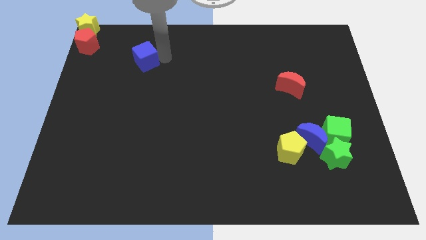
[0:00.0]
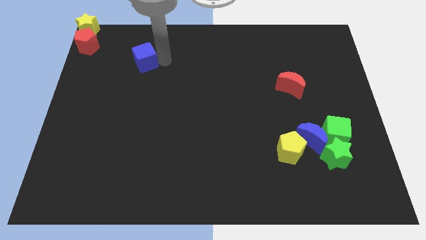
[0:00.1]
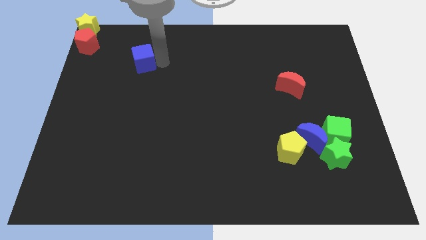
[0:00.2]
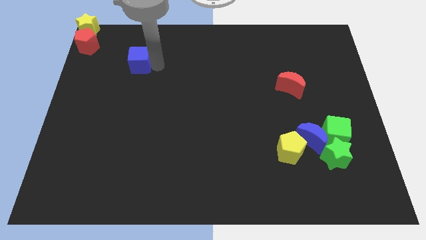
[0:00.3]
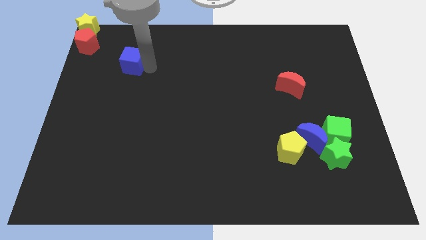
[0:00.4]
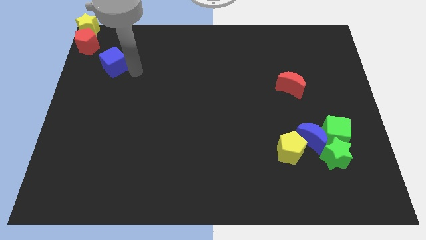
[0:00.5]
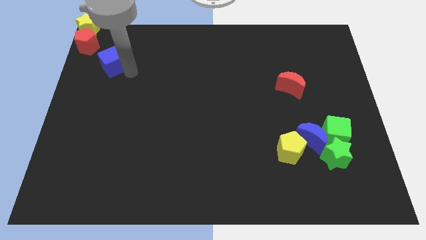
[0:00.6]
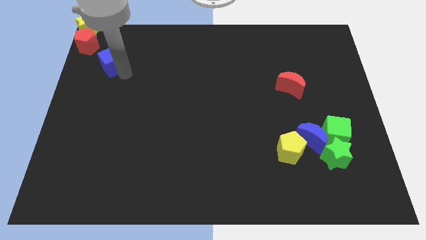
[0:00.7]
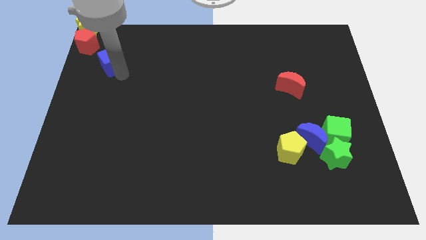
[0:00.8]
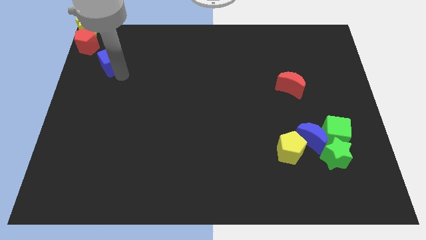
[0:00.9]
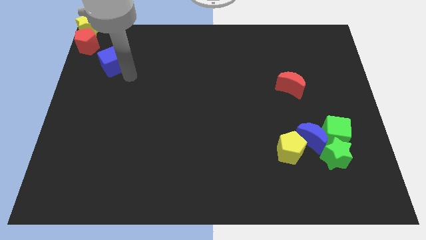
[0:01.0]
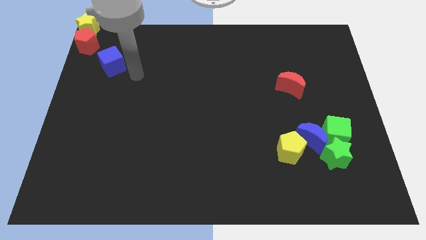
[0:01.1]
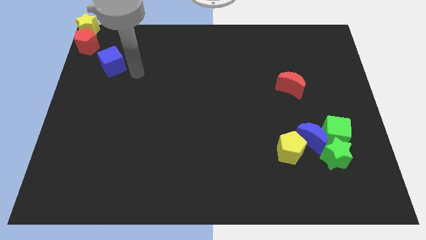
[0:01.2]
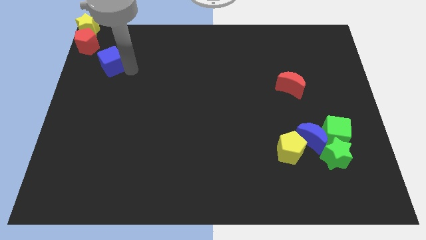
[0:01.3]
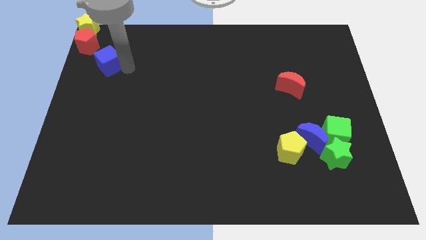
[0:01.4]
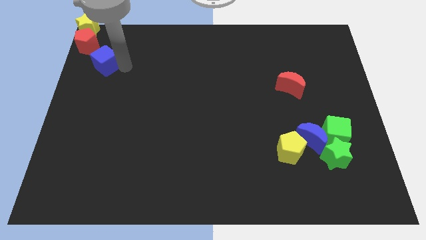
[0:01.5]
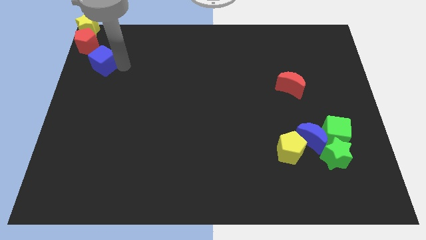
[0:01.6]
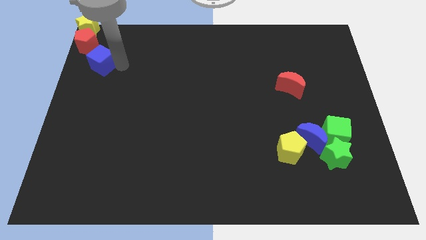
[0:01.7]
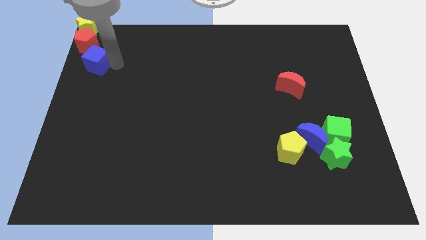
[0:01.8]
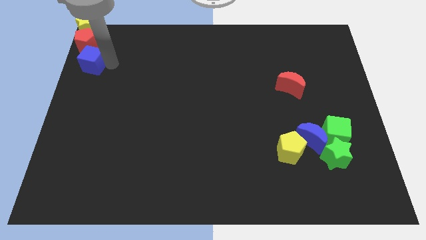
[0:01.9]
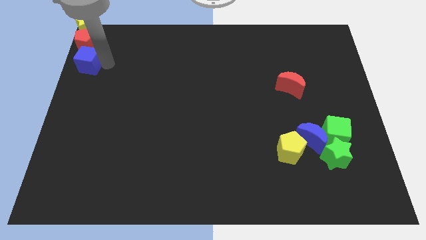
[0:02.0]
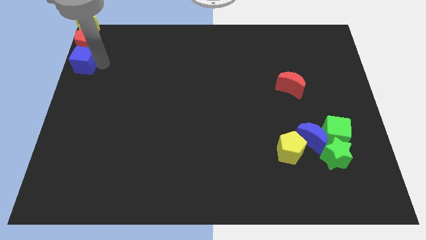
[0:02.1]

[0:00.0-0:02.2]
put the blue cube below the red pentagon

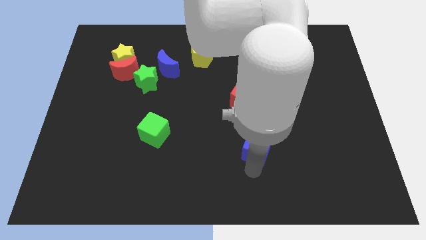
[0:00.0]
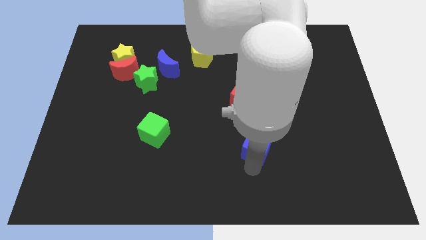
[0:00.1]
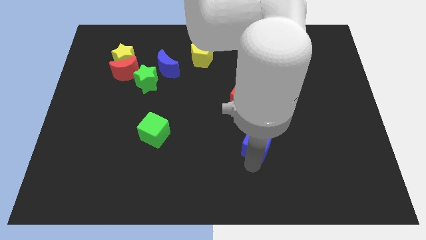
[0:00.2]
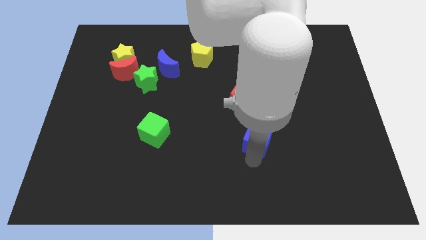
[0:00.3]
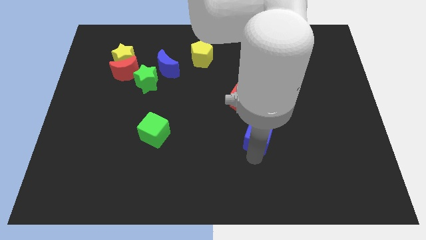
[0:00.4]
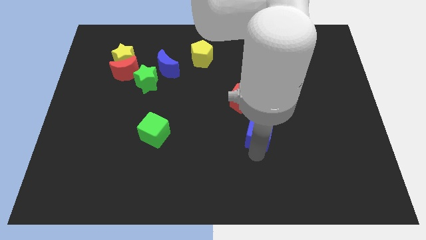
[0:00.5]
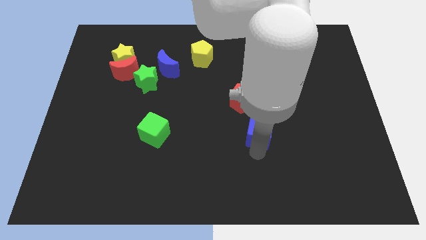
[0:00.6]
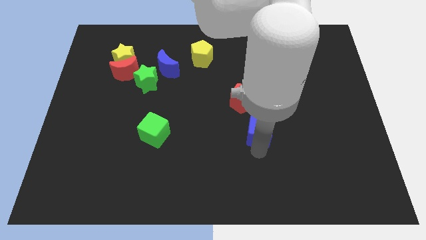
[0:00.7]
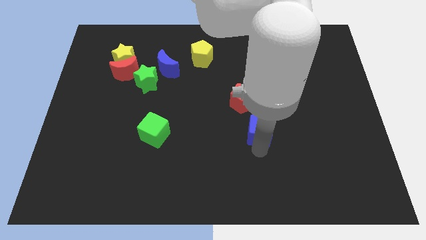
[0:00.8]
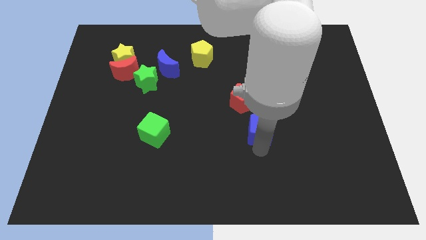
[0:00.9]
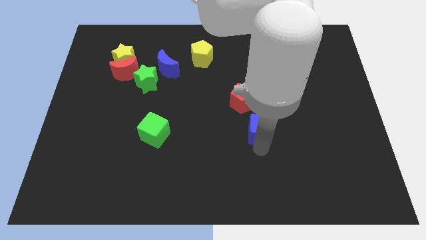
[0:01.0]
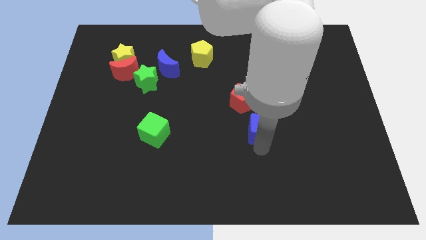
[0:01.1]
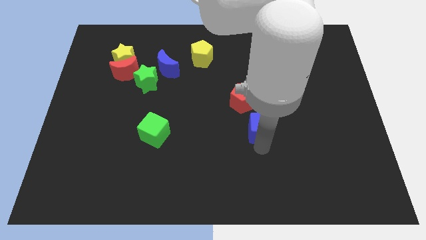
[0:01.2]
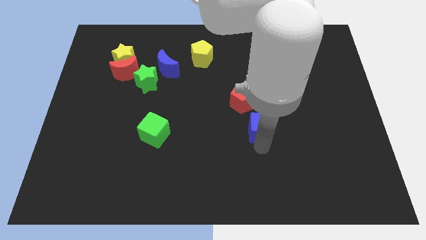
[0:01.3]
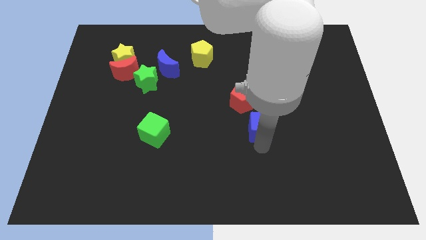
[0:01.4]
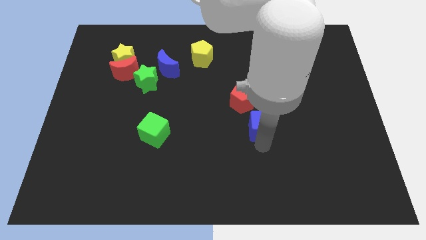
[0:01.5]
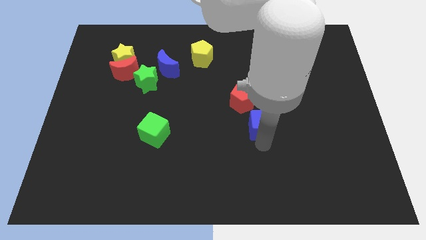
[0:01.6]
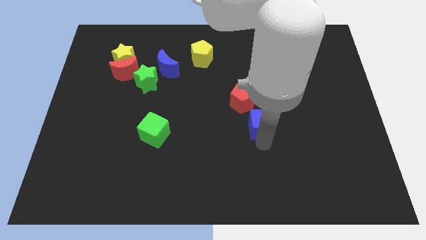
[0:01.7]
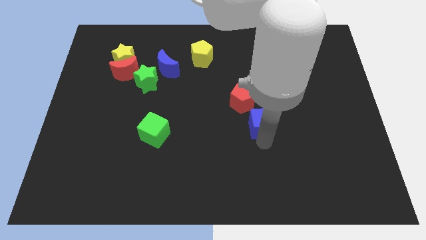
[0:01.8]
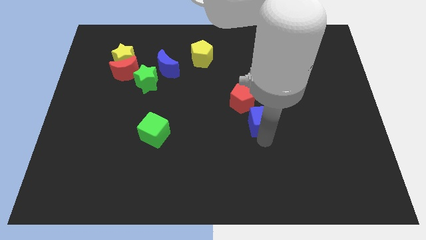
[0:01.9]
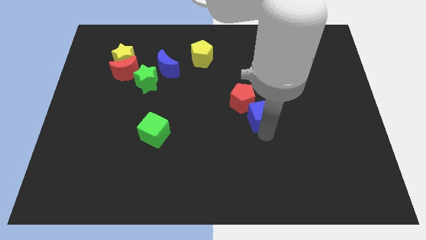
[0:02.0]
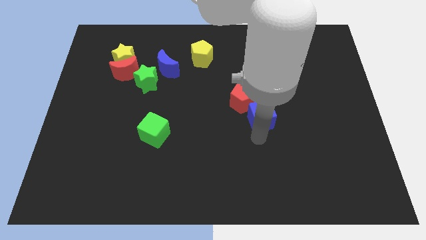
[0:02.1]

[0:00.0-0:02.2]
push the blue cube closer to the red pentagon

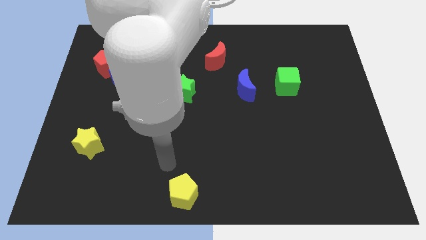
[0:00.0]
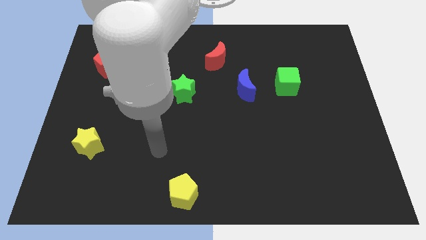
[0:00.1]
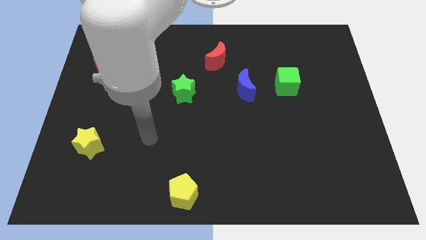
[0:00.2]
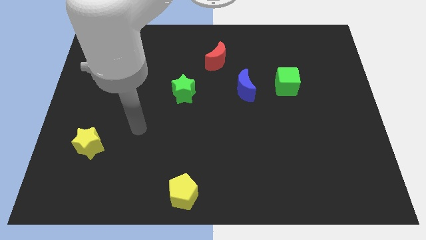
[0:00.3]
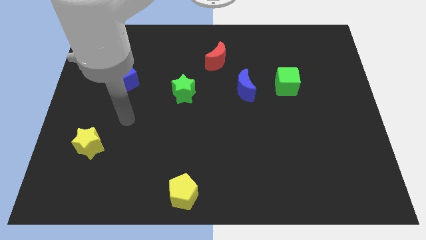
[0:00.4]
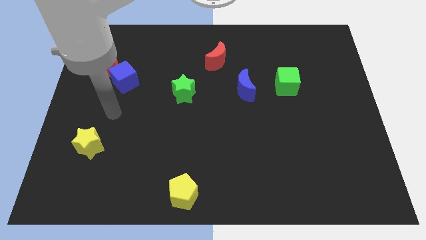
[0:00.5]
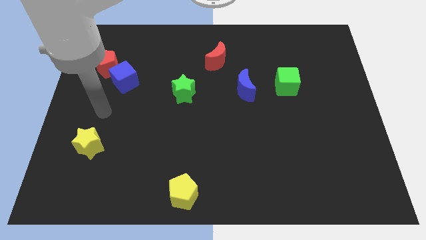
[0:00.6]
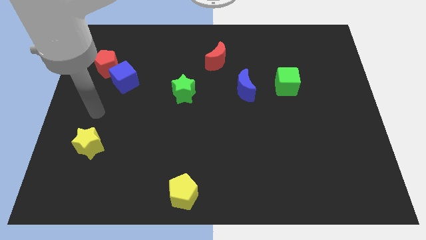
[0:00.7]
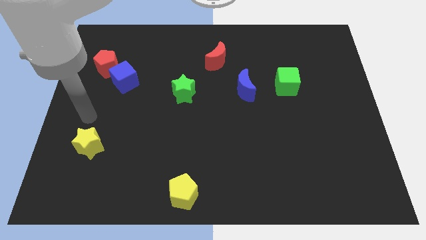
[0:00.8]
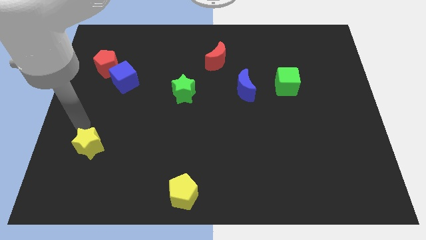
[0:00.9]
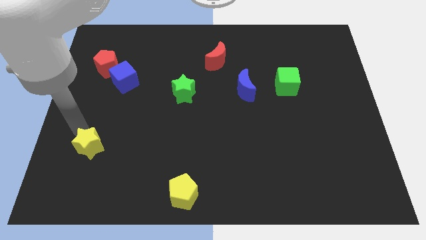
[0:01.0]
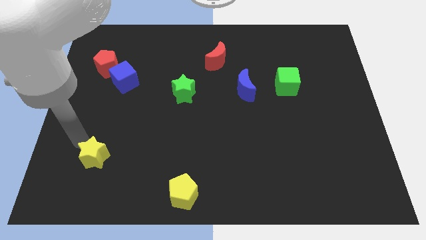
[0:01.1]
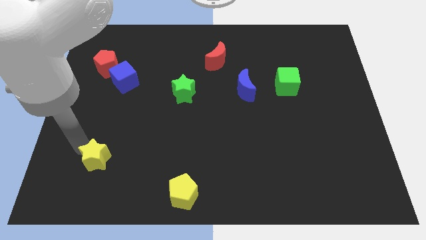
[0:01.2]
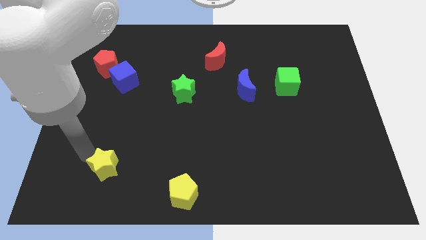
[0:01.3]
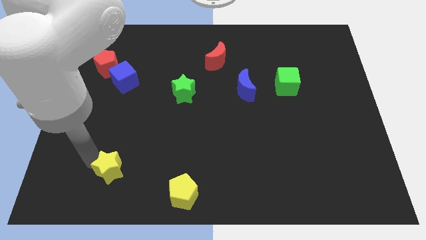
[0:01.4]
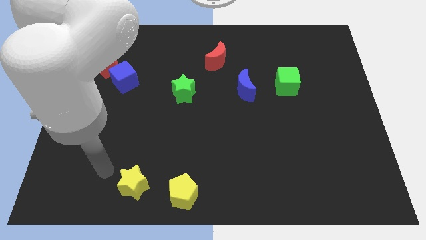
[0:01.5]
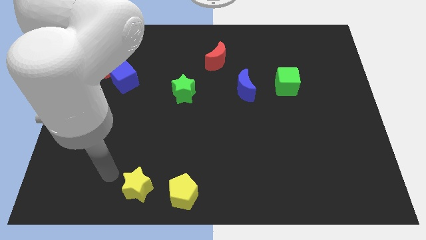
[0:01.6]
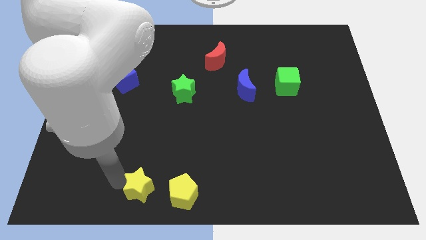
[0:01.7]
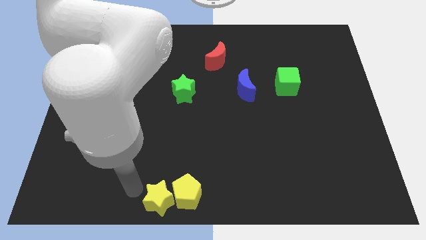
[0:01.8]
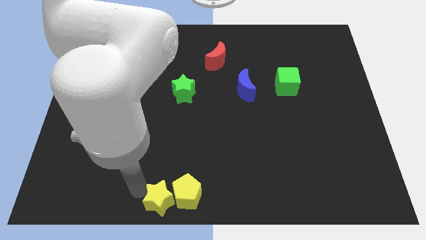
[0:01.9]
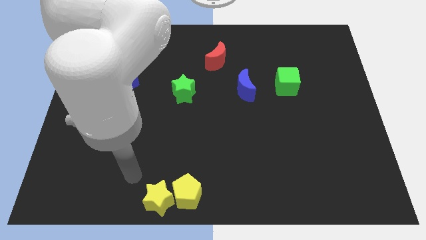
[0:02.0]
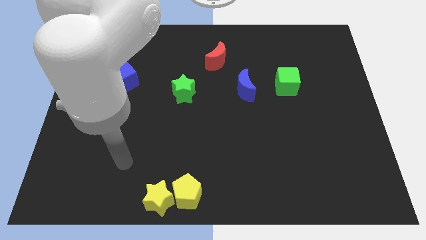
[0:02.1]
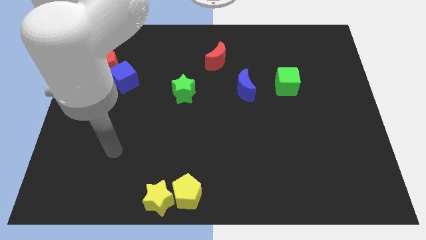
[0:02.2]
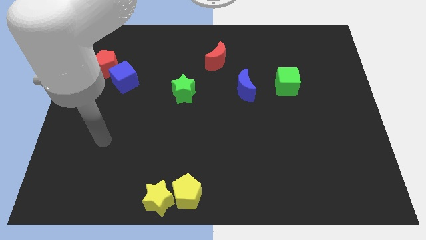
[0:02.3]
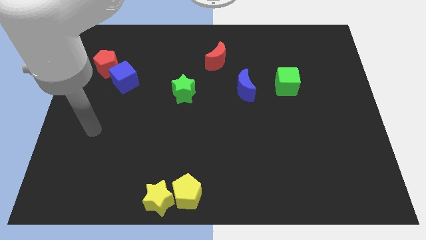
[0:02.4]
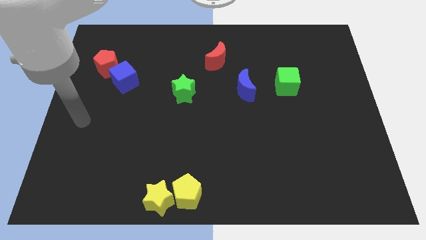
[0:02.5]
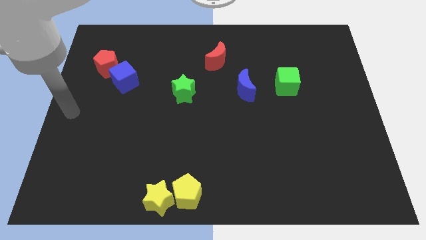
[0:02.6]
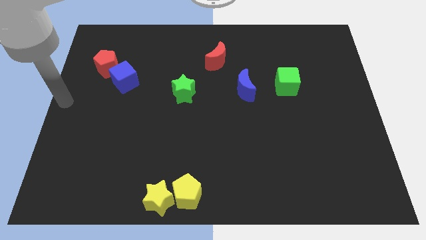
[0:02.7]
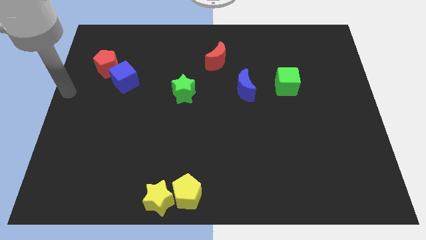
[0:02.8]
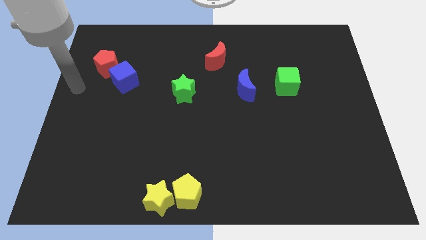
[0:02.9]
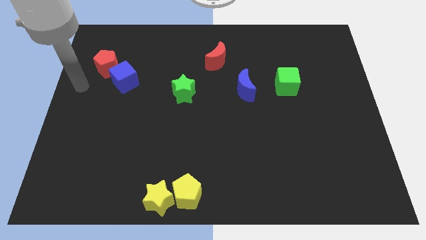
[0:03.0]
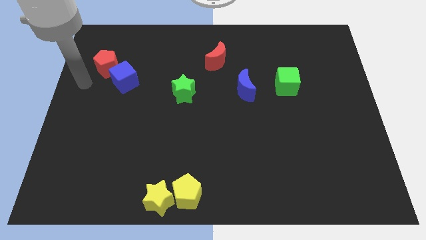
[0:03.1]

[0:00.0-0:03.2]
push the yellow star into the yellow pentagon

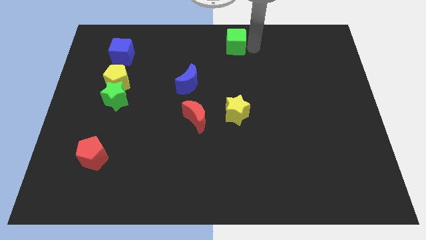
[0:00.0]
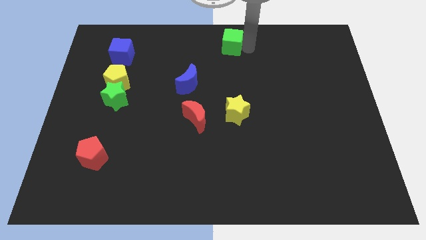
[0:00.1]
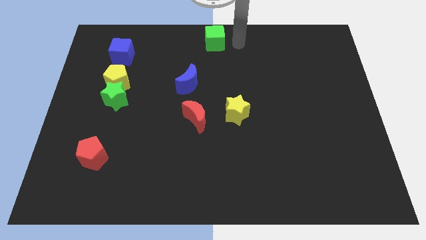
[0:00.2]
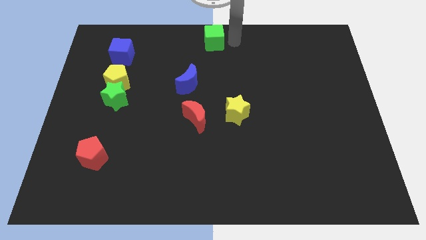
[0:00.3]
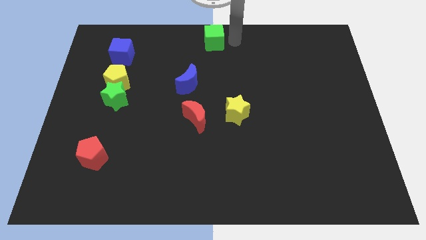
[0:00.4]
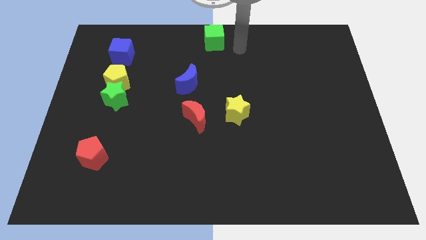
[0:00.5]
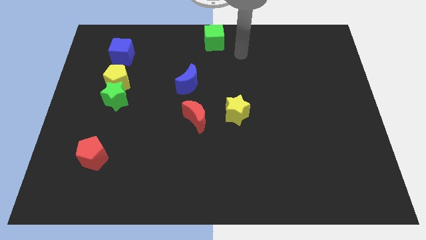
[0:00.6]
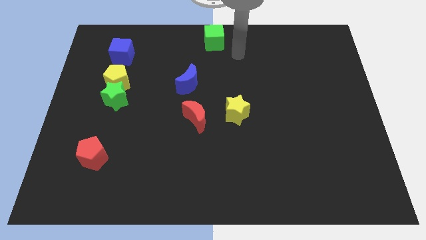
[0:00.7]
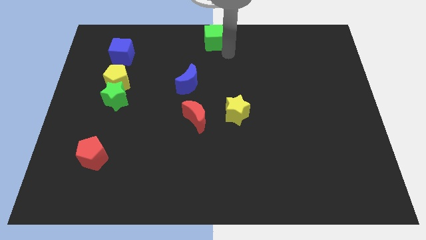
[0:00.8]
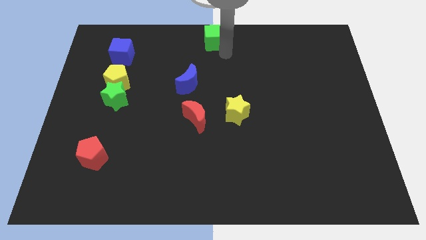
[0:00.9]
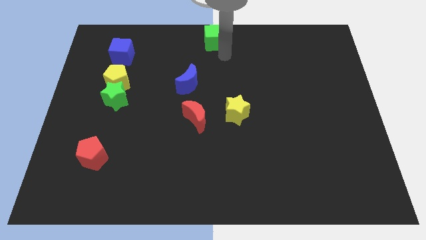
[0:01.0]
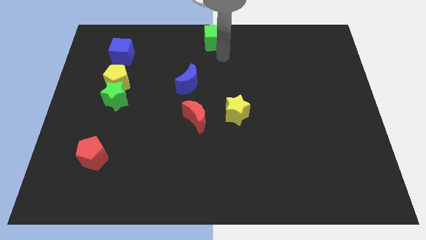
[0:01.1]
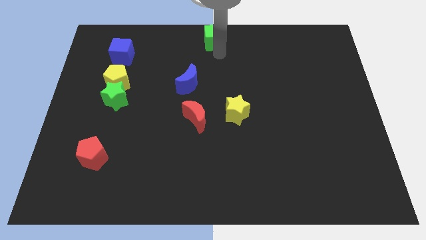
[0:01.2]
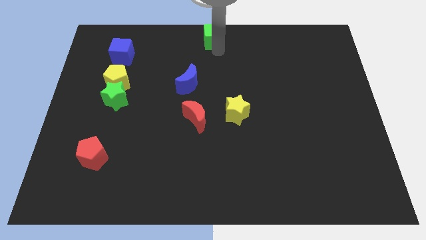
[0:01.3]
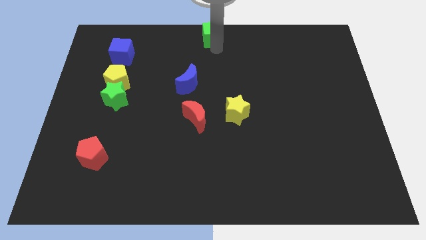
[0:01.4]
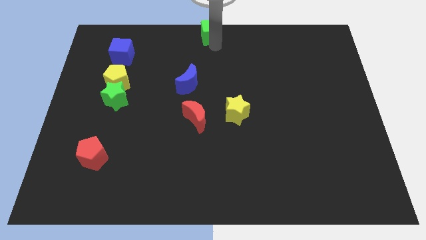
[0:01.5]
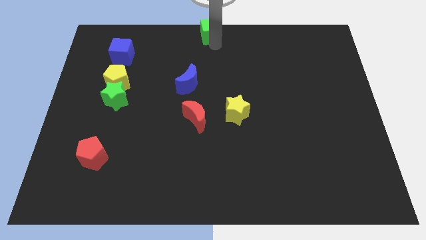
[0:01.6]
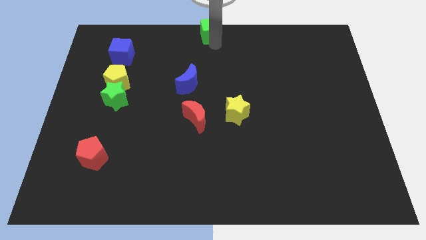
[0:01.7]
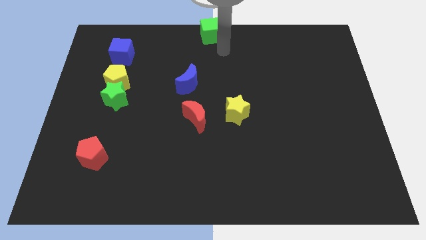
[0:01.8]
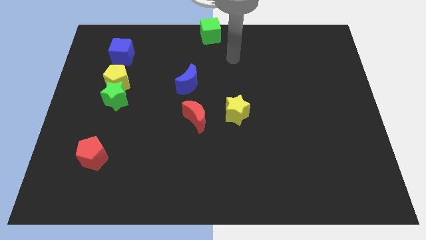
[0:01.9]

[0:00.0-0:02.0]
move the green cube slightly towards the left side
